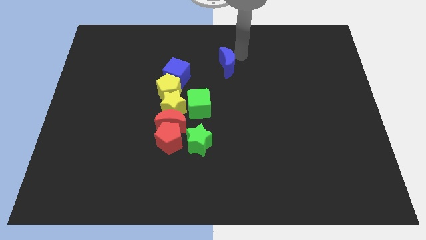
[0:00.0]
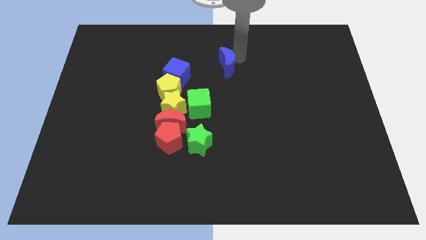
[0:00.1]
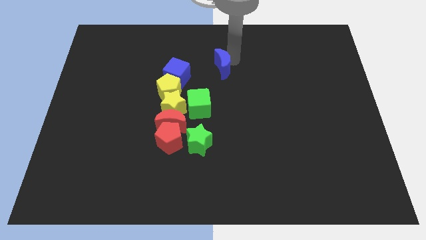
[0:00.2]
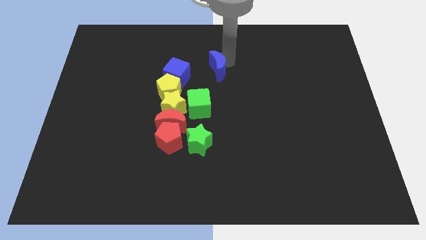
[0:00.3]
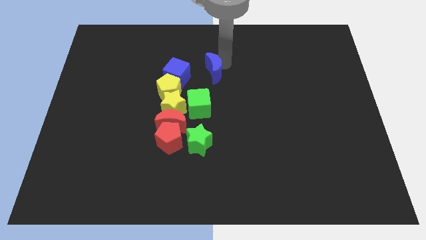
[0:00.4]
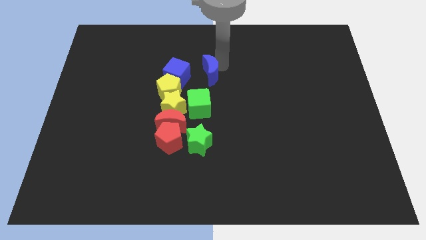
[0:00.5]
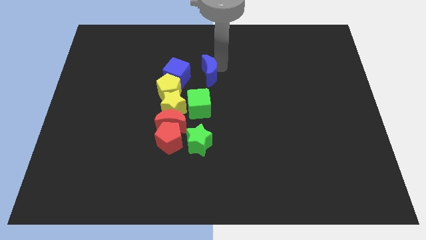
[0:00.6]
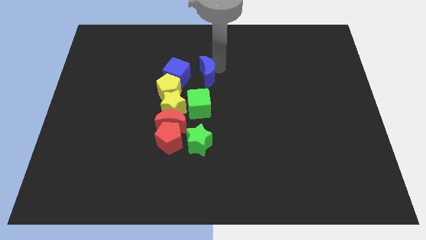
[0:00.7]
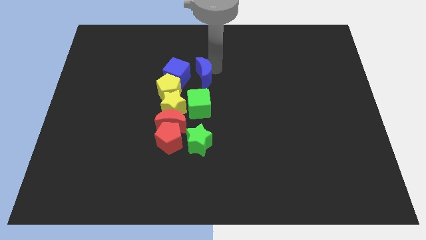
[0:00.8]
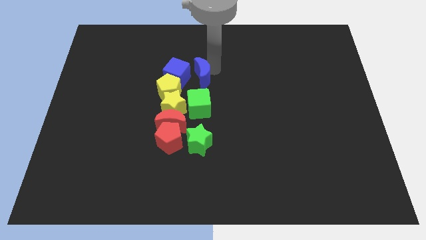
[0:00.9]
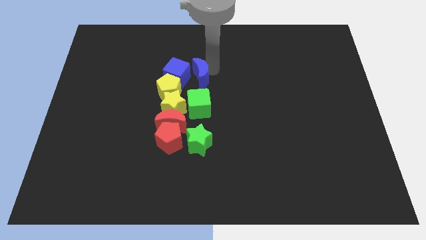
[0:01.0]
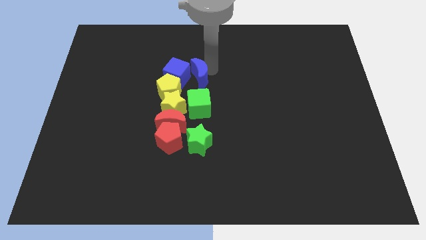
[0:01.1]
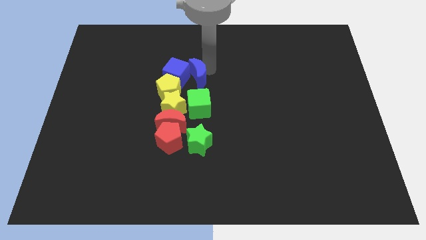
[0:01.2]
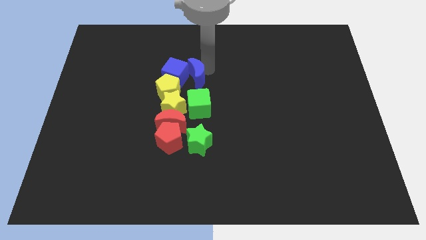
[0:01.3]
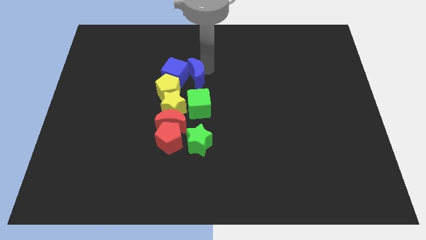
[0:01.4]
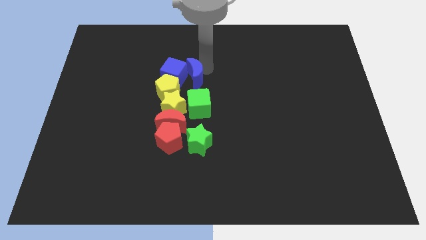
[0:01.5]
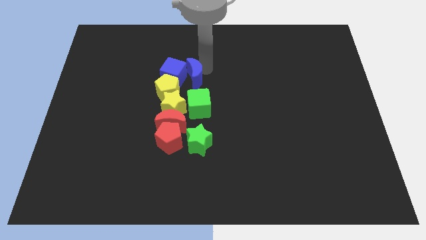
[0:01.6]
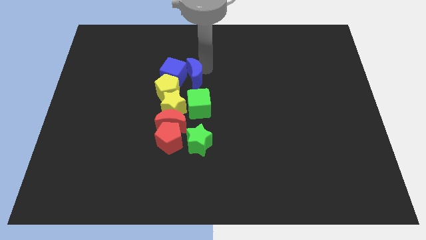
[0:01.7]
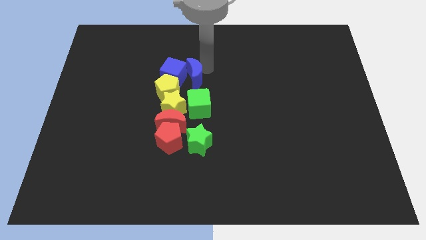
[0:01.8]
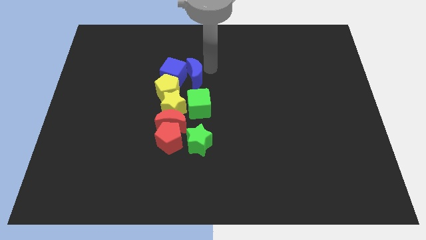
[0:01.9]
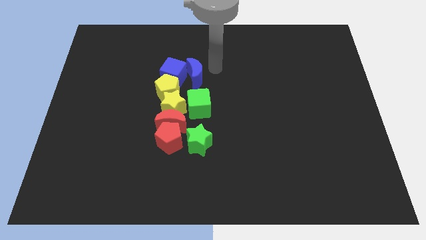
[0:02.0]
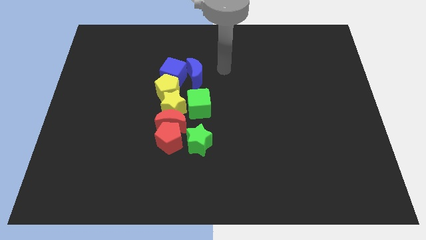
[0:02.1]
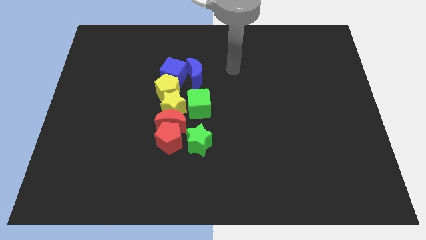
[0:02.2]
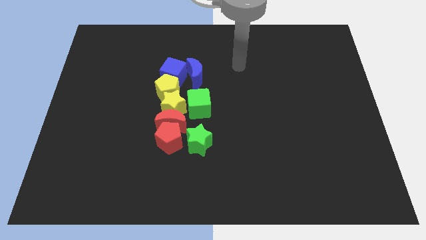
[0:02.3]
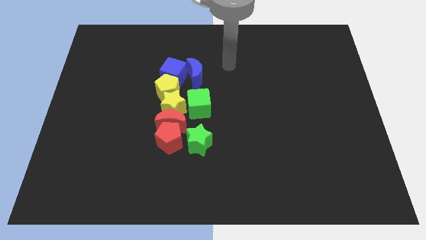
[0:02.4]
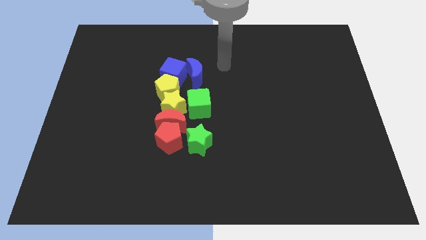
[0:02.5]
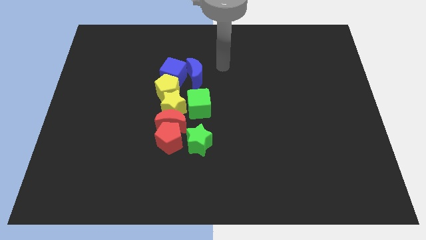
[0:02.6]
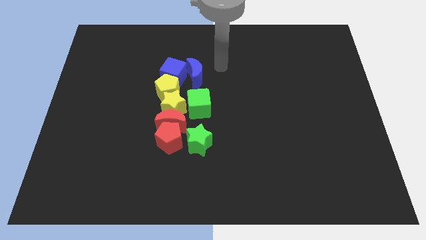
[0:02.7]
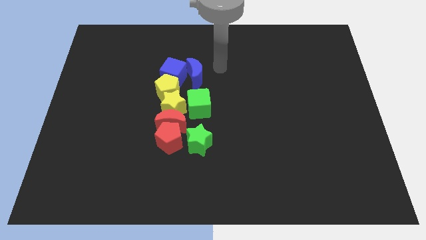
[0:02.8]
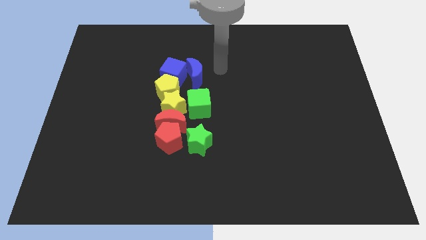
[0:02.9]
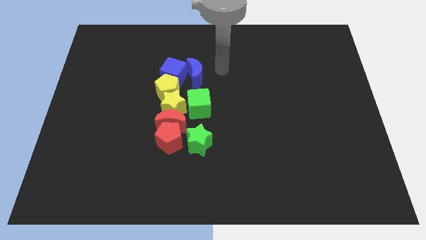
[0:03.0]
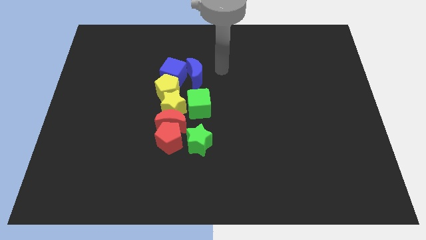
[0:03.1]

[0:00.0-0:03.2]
slide the blue moon at the top of green cube

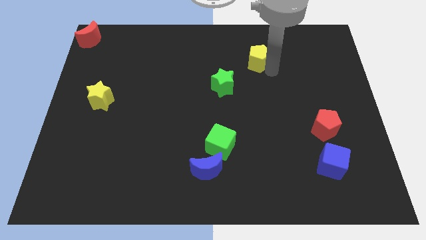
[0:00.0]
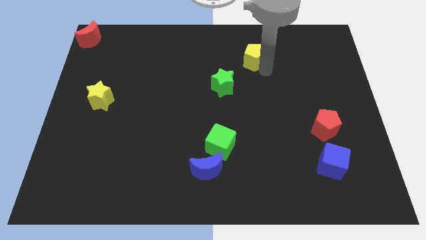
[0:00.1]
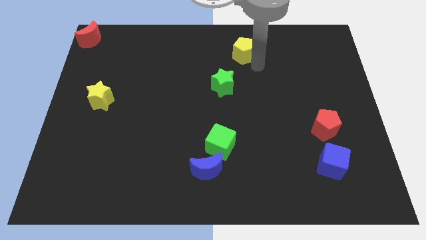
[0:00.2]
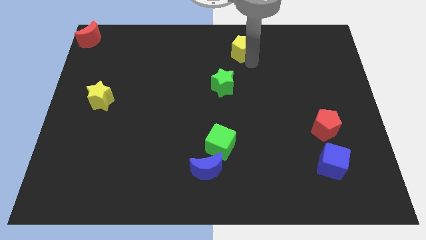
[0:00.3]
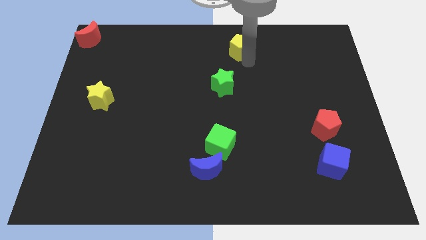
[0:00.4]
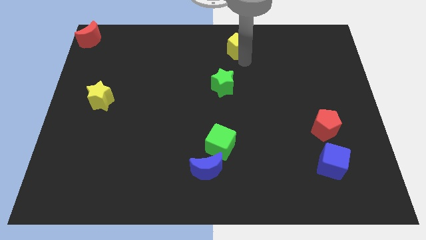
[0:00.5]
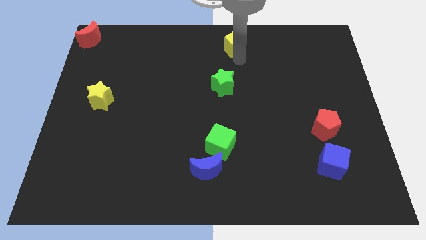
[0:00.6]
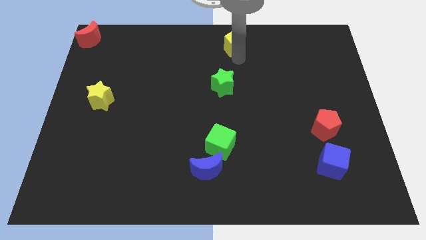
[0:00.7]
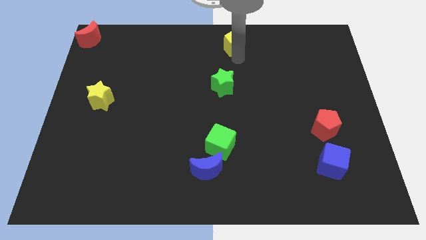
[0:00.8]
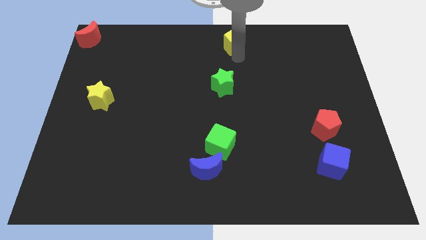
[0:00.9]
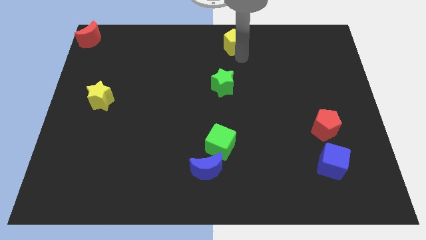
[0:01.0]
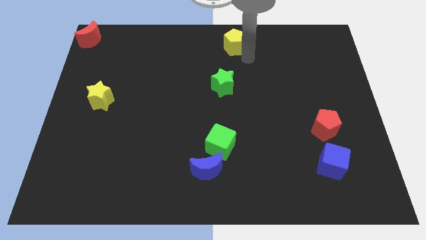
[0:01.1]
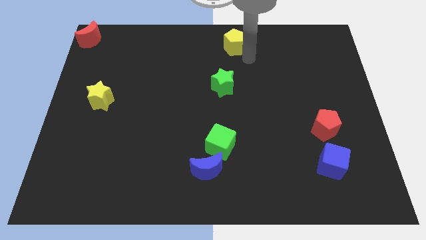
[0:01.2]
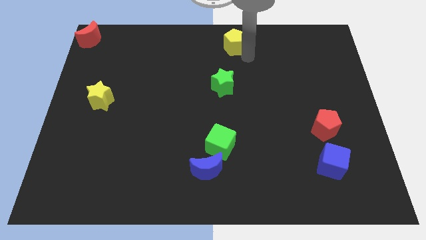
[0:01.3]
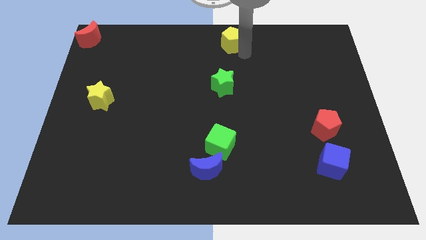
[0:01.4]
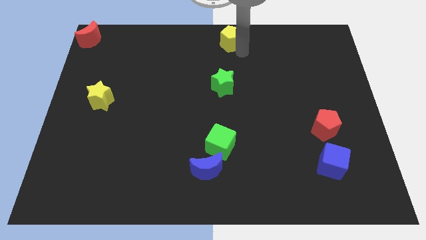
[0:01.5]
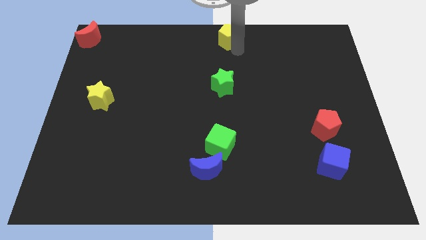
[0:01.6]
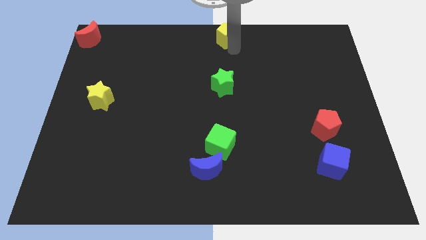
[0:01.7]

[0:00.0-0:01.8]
place the yellow pentagon to the top of green star

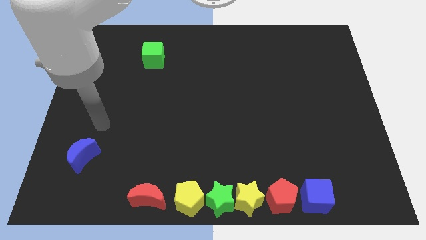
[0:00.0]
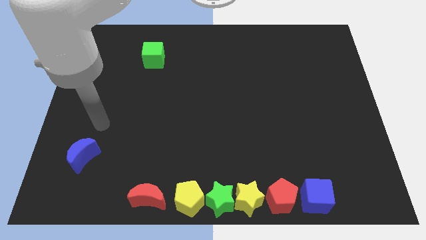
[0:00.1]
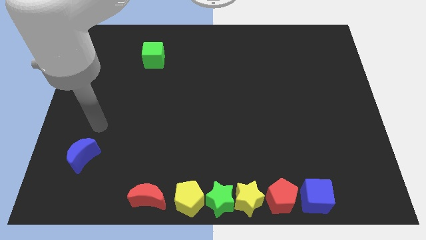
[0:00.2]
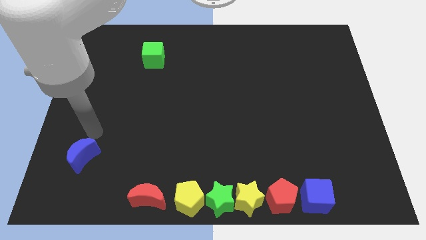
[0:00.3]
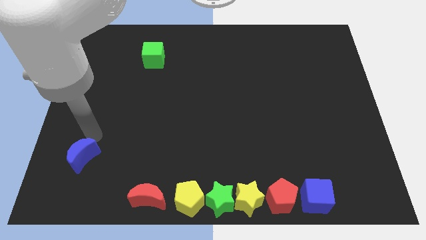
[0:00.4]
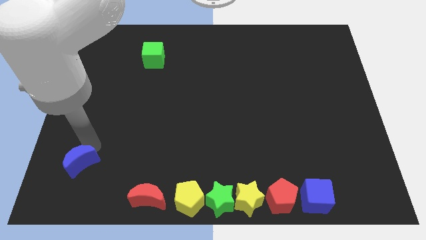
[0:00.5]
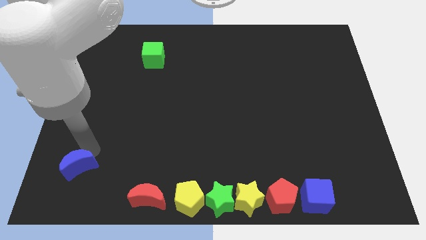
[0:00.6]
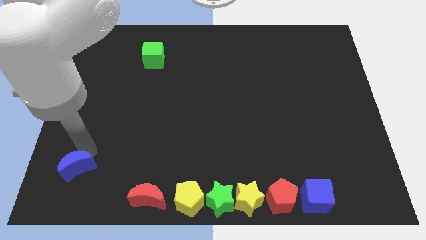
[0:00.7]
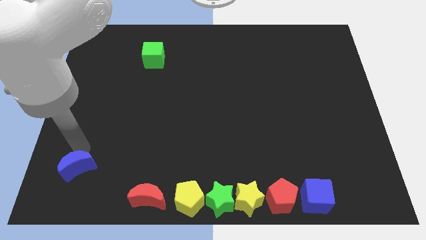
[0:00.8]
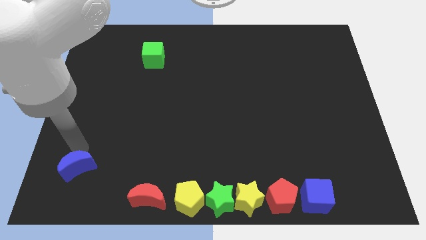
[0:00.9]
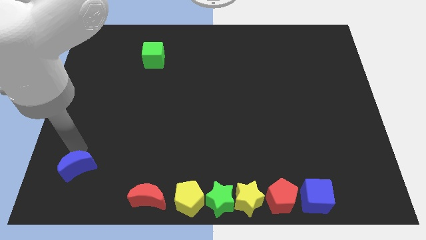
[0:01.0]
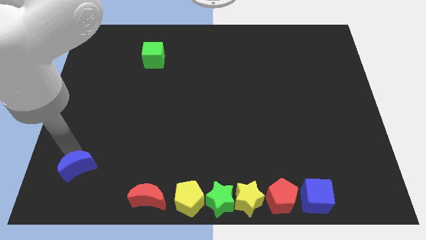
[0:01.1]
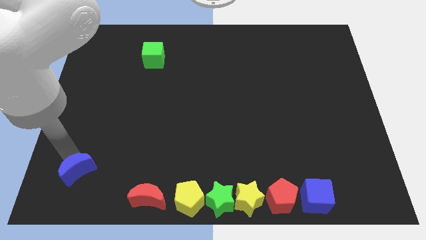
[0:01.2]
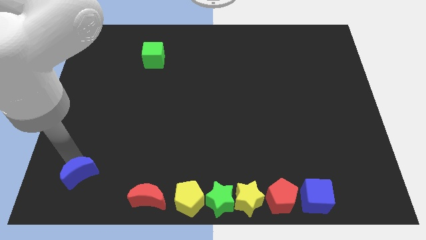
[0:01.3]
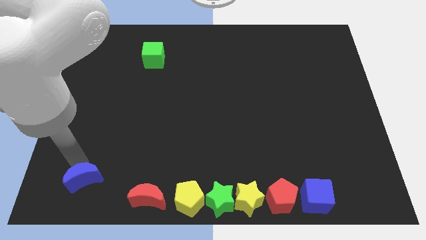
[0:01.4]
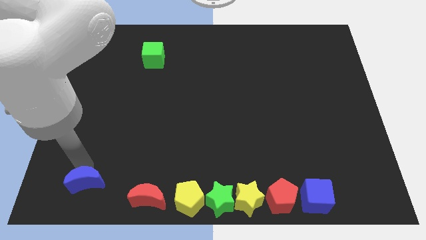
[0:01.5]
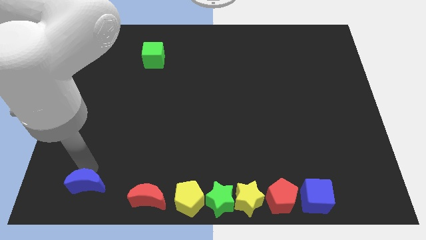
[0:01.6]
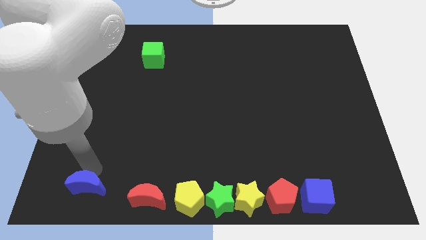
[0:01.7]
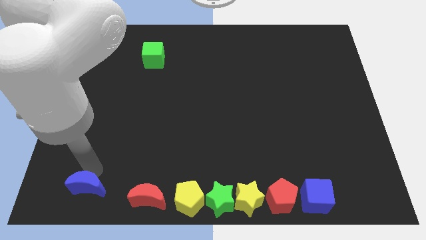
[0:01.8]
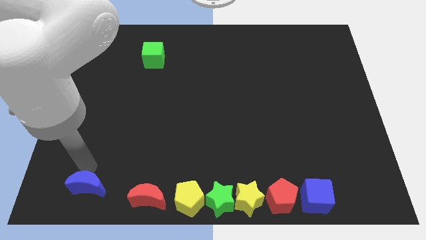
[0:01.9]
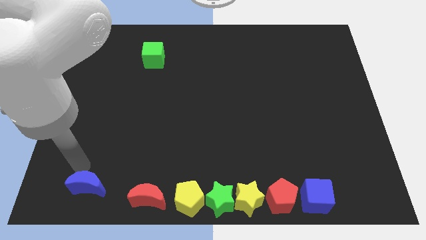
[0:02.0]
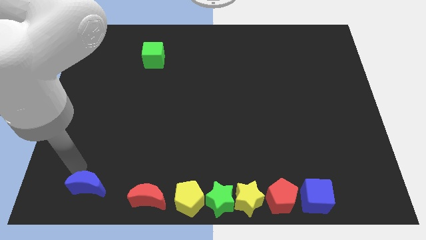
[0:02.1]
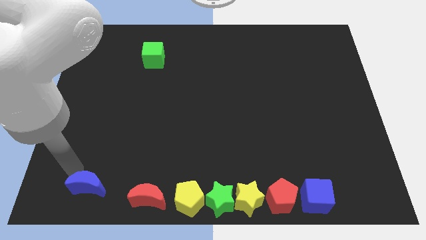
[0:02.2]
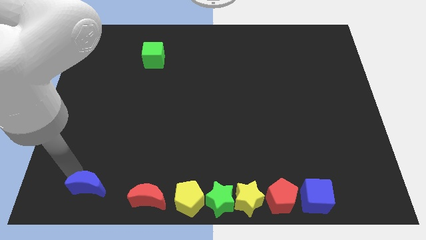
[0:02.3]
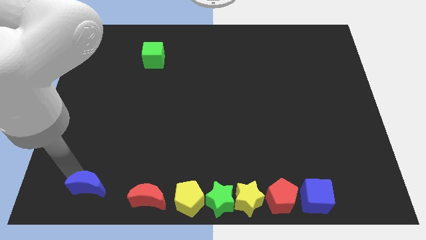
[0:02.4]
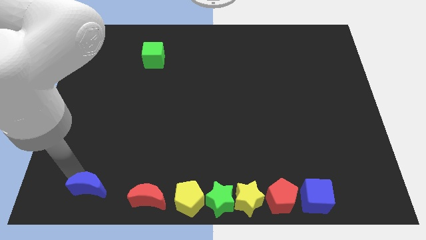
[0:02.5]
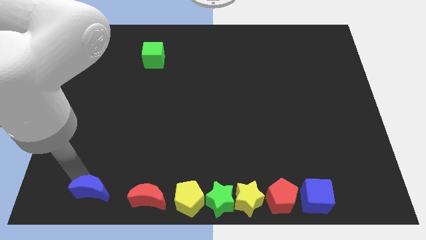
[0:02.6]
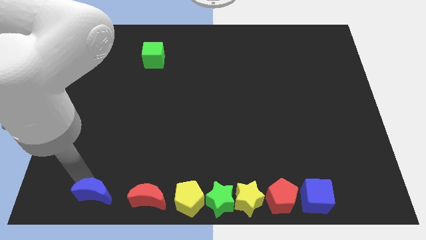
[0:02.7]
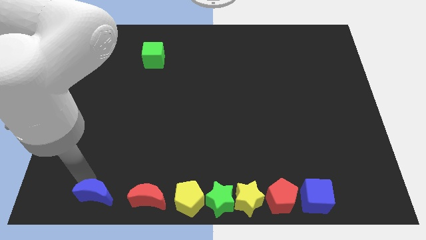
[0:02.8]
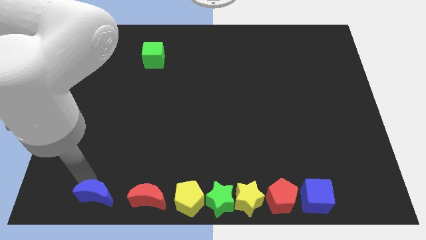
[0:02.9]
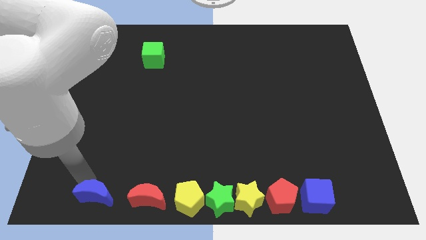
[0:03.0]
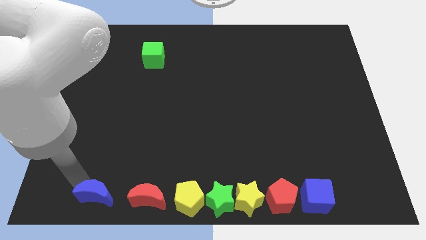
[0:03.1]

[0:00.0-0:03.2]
place the blue moon on the bottom left side of the board

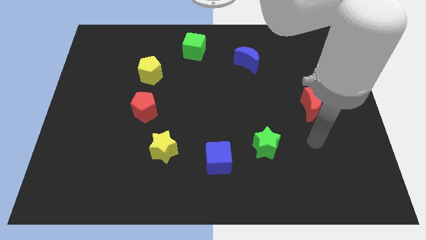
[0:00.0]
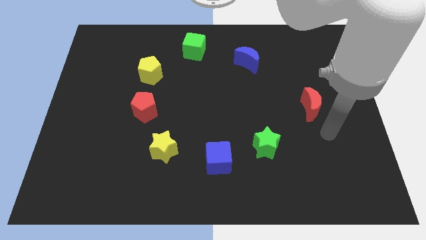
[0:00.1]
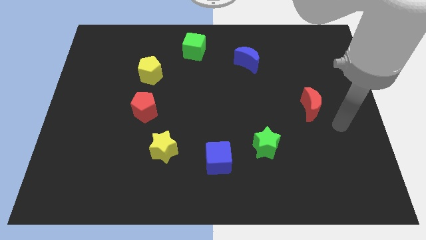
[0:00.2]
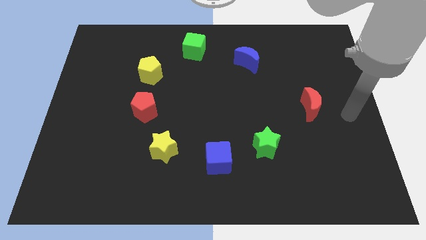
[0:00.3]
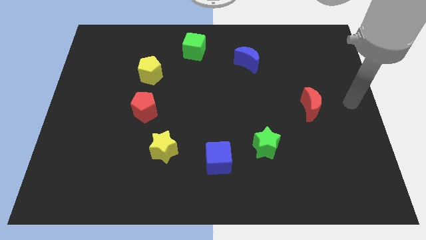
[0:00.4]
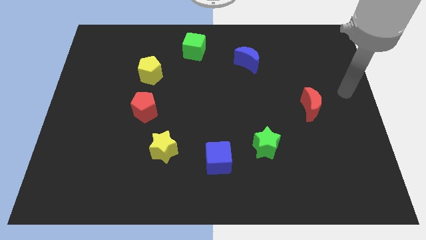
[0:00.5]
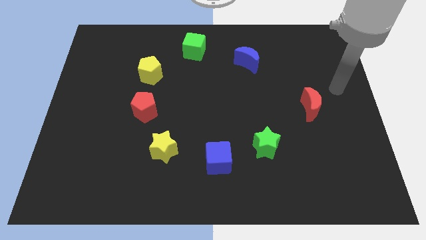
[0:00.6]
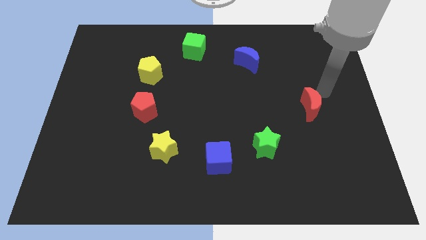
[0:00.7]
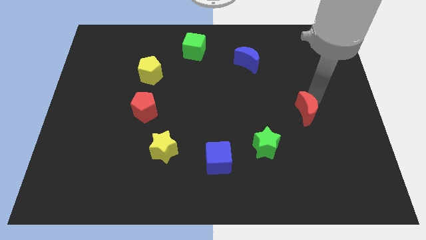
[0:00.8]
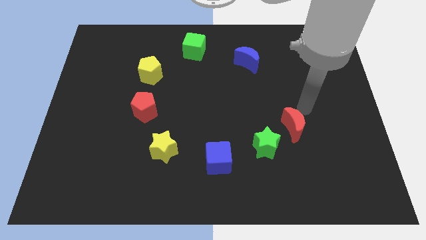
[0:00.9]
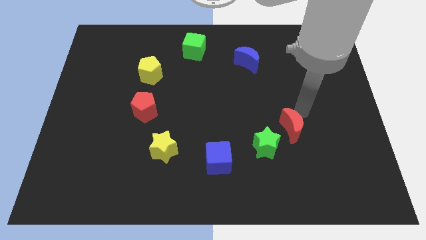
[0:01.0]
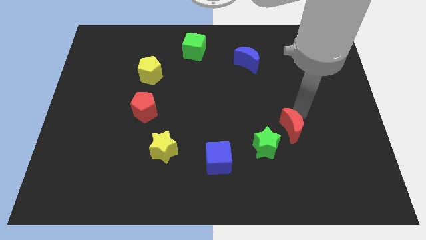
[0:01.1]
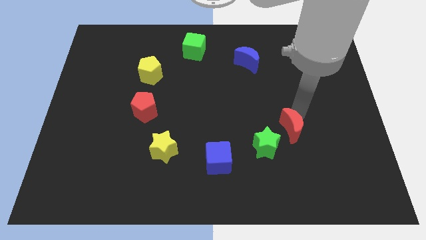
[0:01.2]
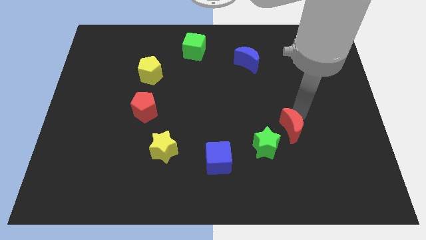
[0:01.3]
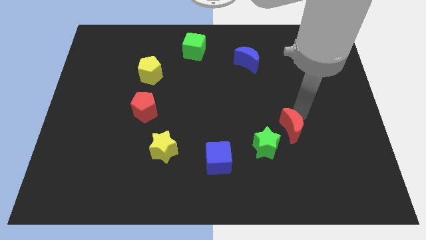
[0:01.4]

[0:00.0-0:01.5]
slide the red moon diagonally top right to green star
